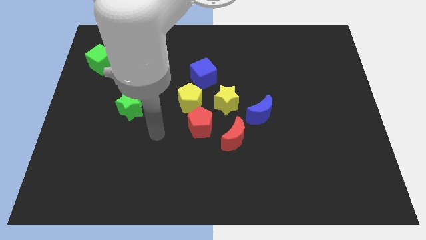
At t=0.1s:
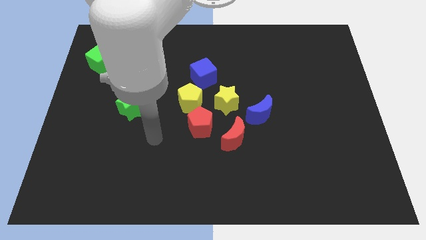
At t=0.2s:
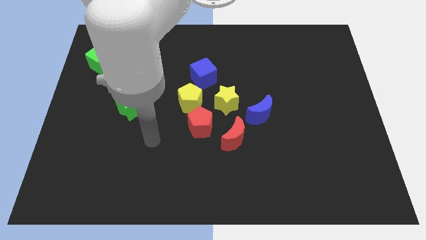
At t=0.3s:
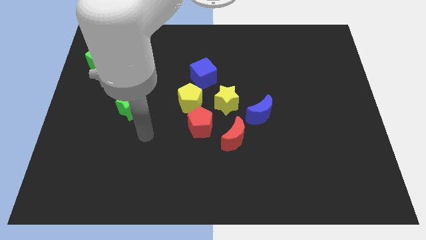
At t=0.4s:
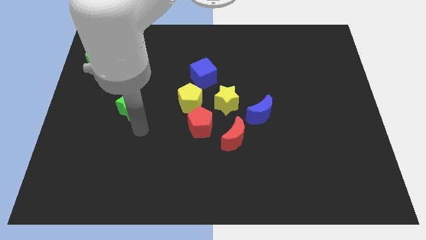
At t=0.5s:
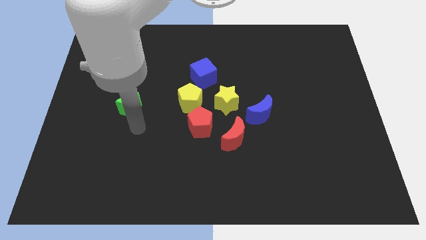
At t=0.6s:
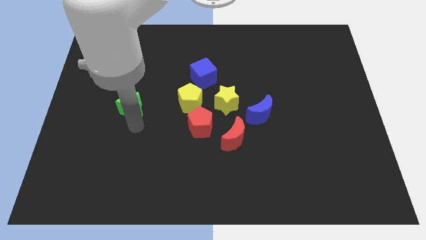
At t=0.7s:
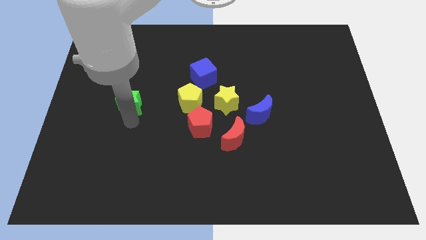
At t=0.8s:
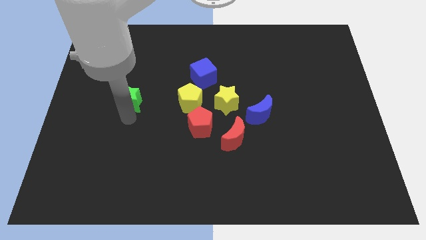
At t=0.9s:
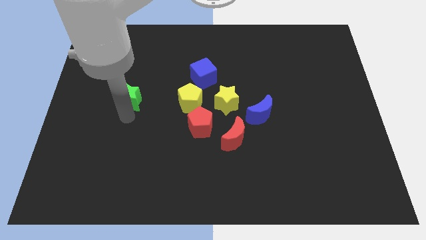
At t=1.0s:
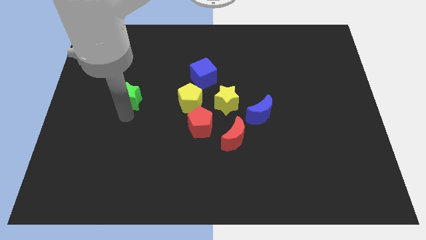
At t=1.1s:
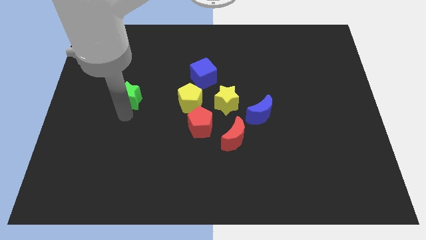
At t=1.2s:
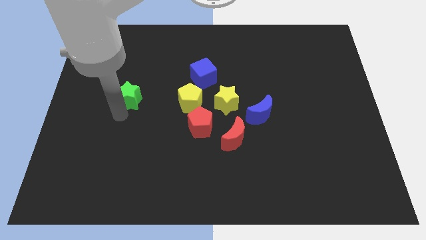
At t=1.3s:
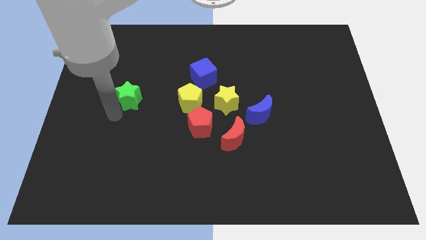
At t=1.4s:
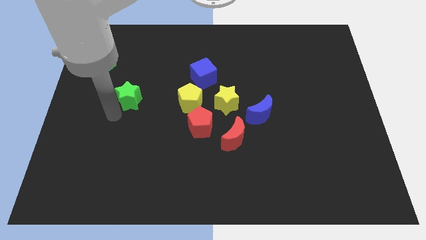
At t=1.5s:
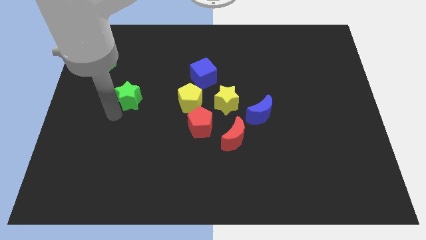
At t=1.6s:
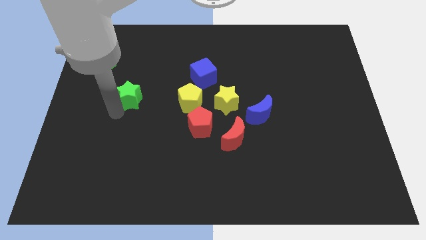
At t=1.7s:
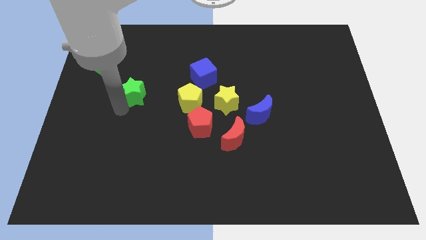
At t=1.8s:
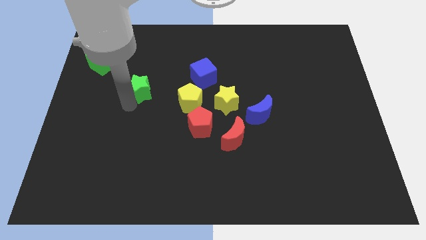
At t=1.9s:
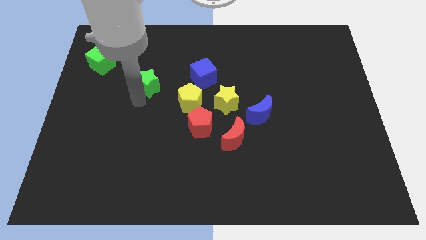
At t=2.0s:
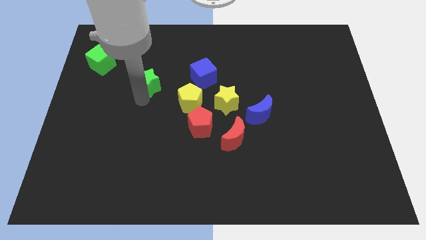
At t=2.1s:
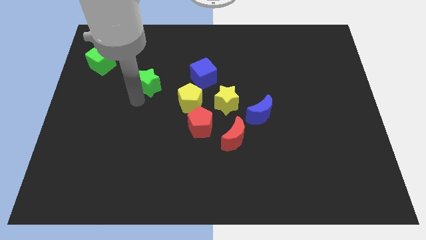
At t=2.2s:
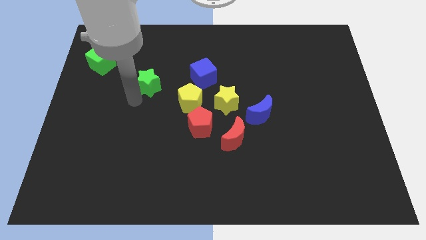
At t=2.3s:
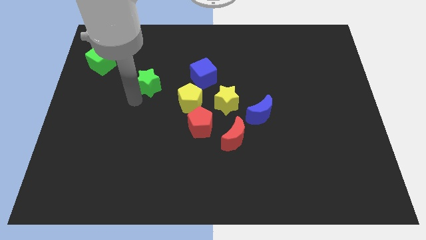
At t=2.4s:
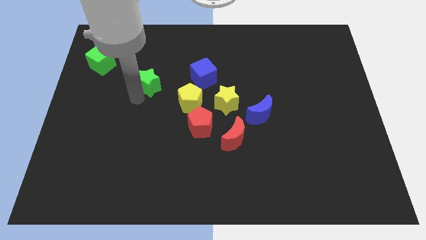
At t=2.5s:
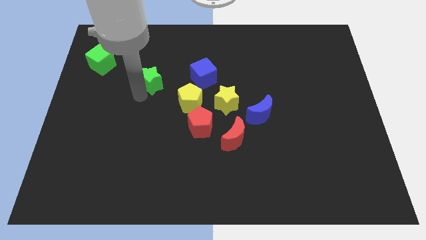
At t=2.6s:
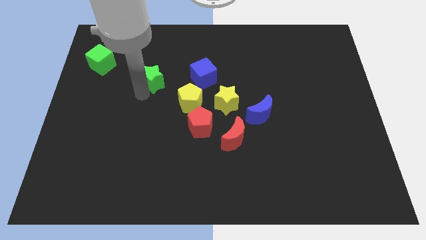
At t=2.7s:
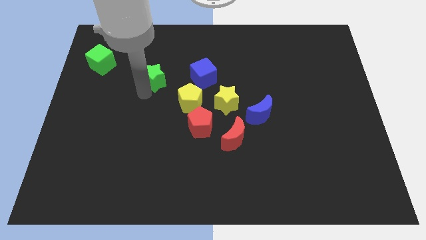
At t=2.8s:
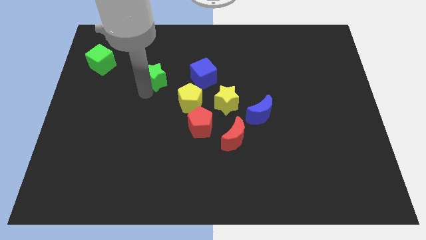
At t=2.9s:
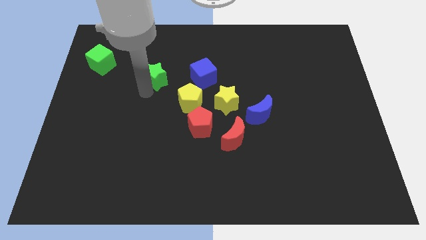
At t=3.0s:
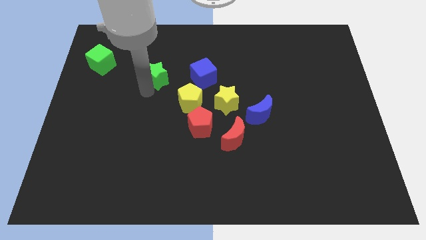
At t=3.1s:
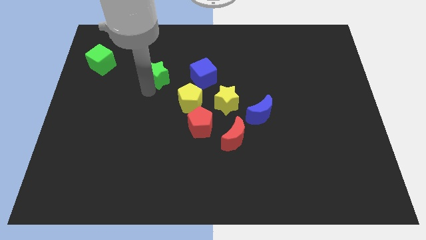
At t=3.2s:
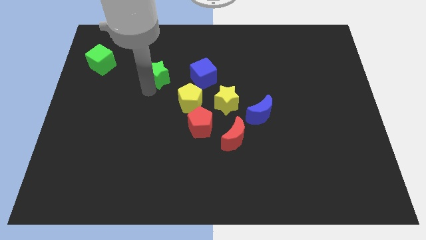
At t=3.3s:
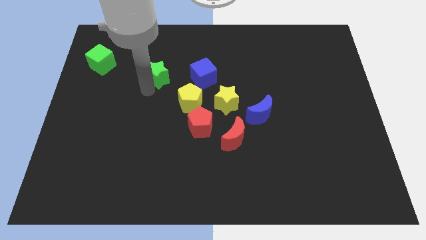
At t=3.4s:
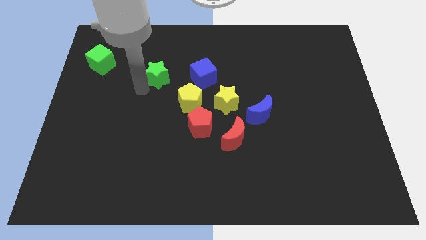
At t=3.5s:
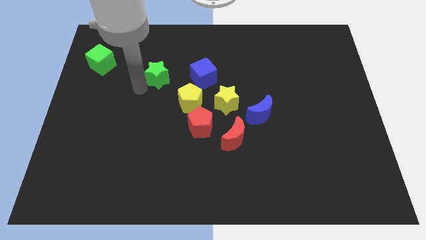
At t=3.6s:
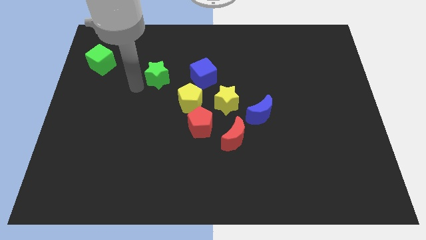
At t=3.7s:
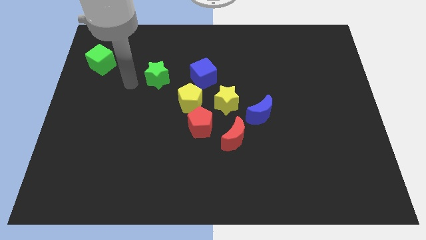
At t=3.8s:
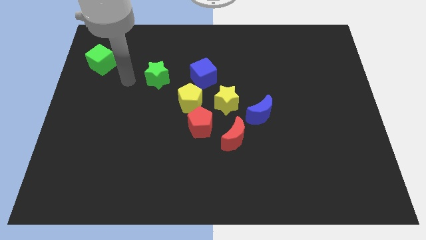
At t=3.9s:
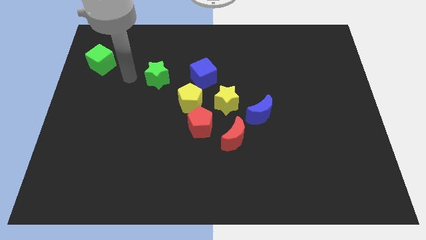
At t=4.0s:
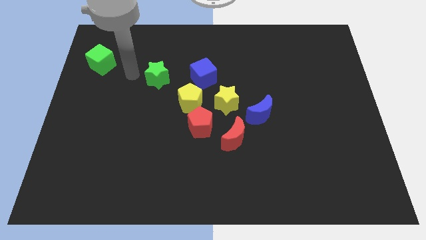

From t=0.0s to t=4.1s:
place the green star to the left of blue cube

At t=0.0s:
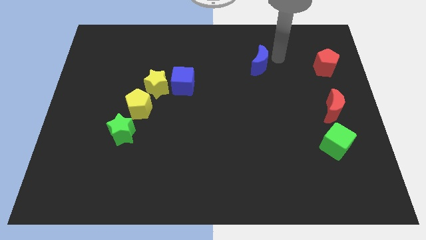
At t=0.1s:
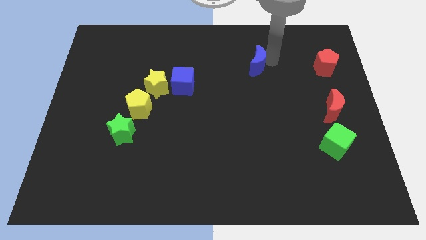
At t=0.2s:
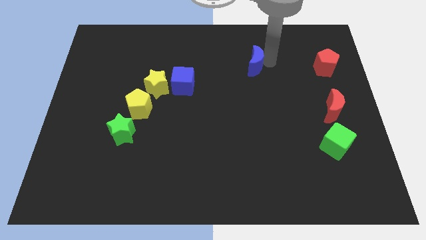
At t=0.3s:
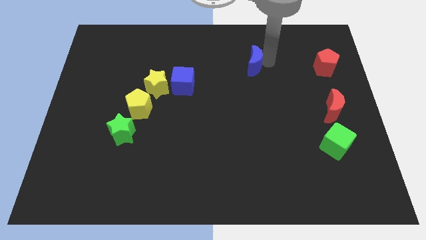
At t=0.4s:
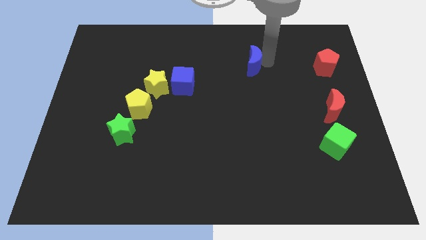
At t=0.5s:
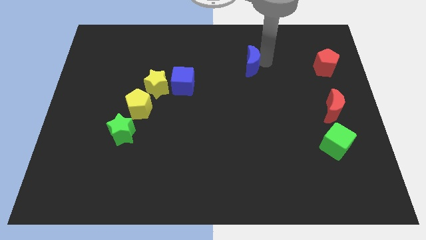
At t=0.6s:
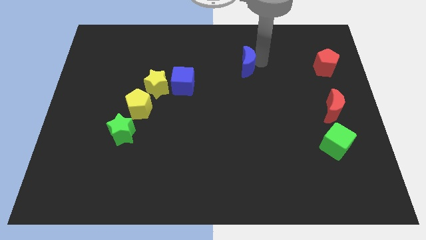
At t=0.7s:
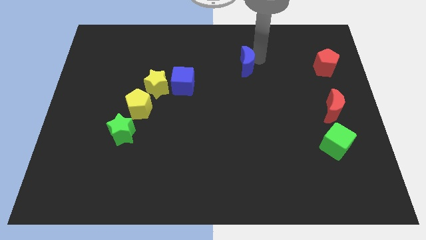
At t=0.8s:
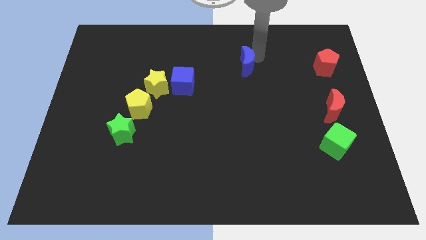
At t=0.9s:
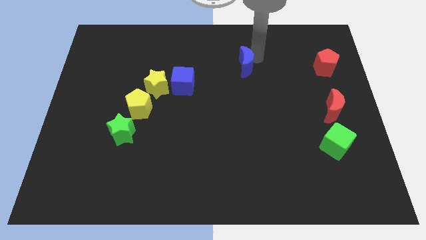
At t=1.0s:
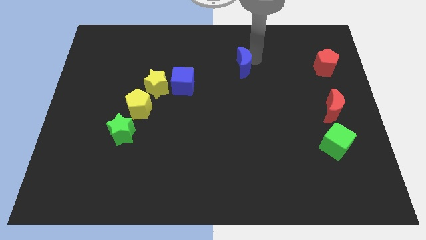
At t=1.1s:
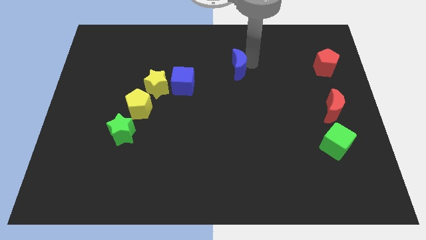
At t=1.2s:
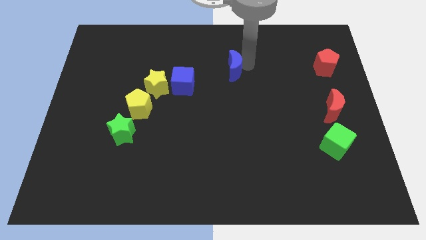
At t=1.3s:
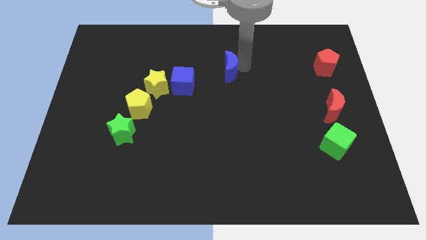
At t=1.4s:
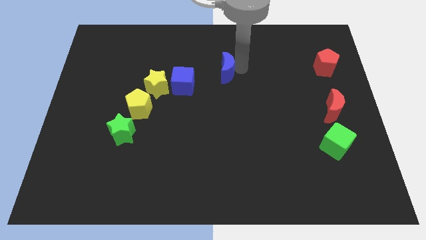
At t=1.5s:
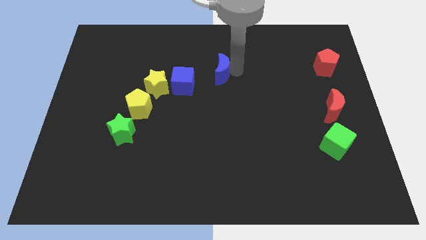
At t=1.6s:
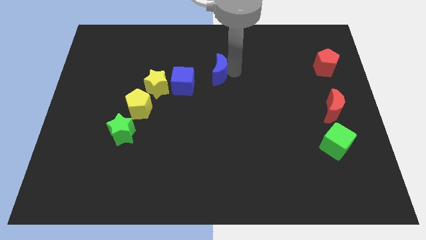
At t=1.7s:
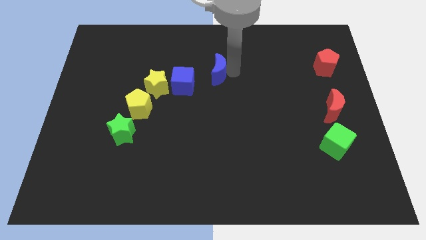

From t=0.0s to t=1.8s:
move the blue crescent towards blue cube

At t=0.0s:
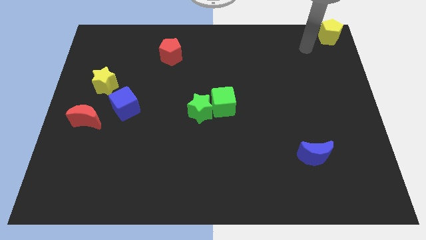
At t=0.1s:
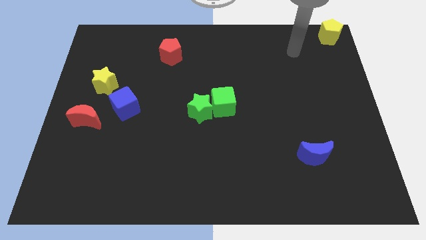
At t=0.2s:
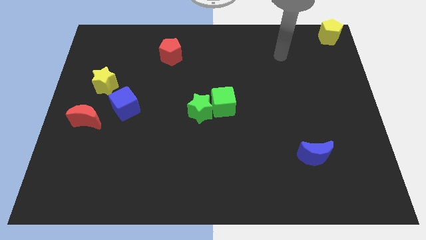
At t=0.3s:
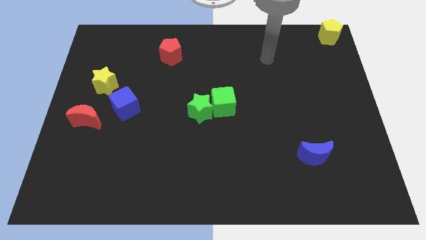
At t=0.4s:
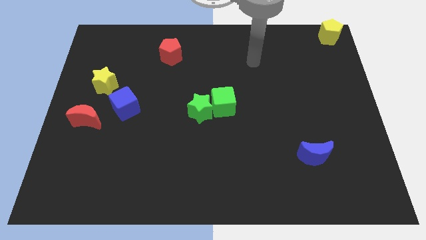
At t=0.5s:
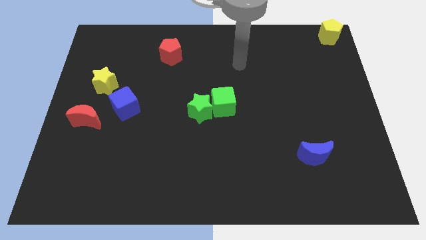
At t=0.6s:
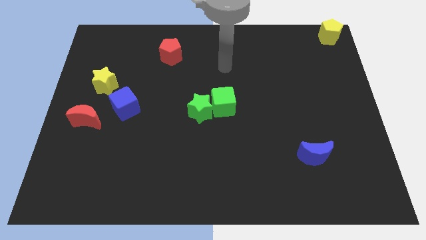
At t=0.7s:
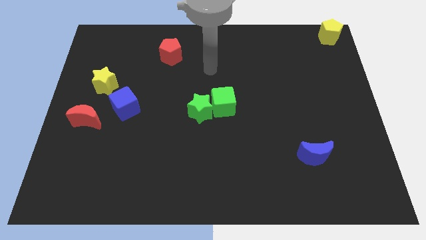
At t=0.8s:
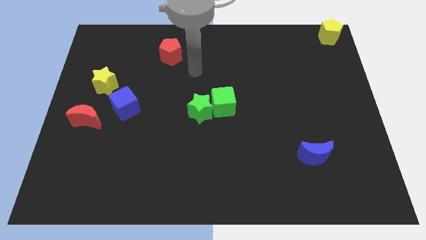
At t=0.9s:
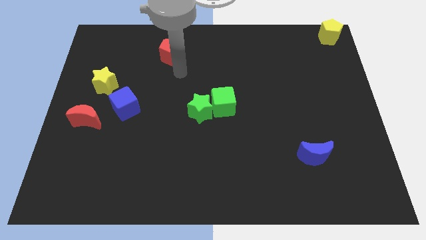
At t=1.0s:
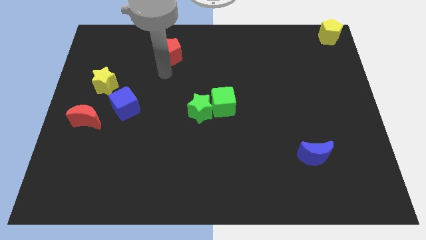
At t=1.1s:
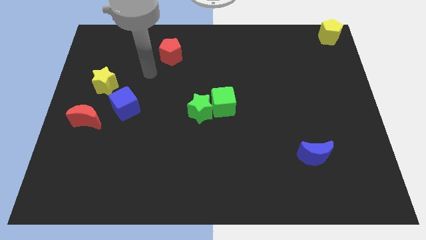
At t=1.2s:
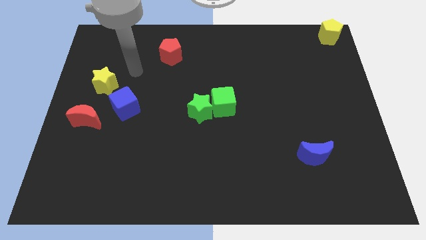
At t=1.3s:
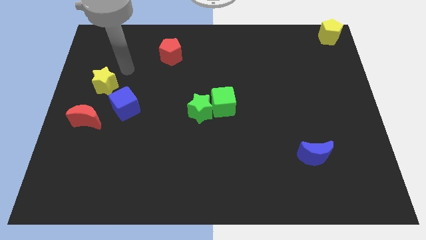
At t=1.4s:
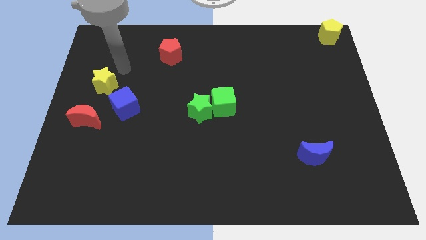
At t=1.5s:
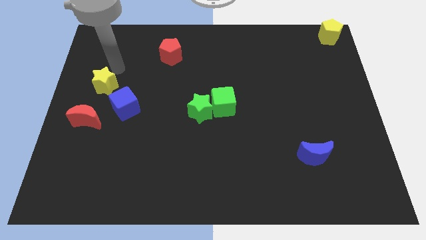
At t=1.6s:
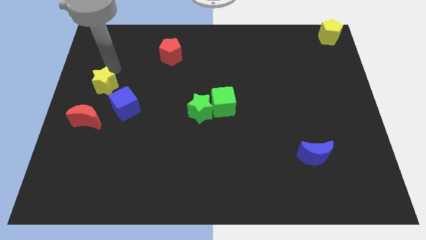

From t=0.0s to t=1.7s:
move your arm to the top of the yellow star

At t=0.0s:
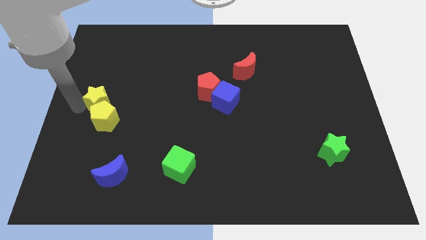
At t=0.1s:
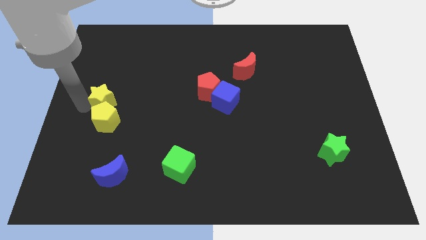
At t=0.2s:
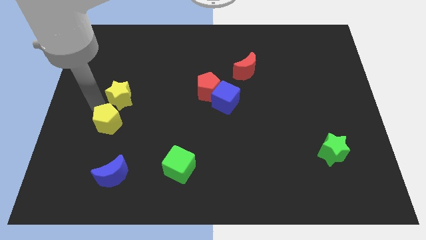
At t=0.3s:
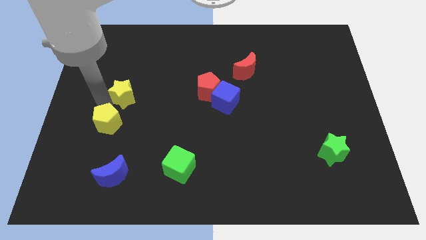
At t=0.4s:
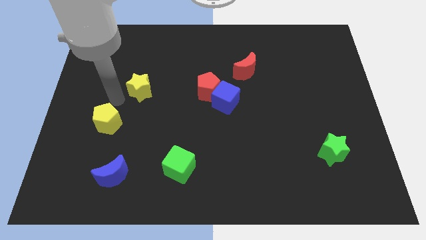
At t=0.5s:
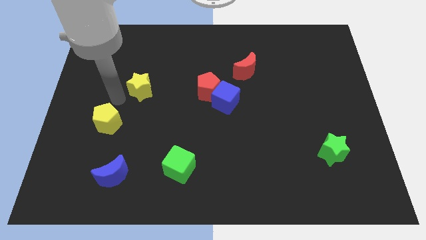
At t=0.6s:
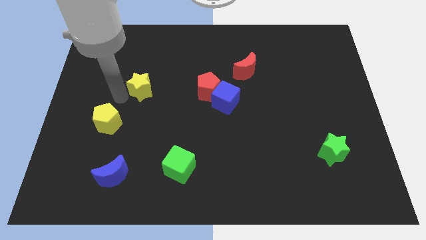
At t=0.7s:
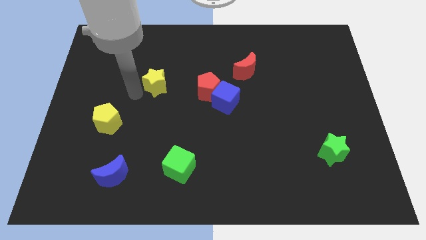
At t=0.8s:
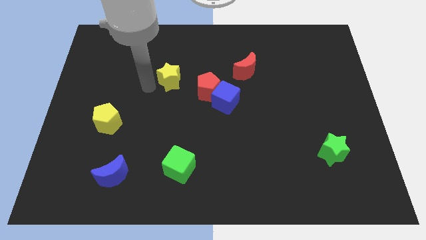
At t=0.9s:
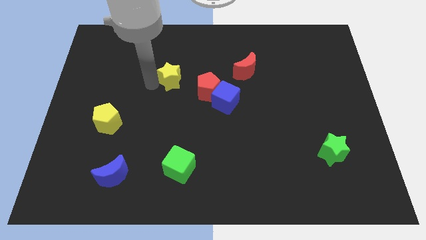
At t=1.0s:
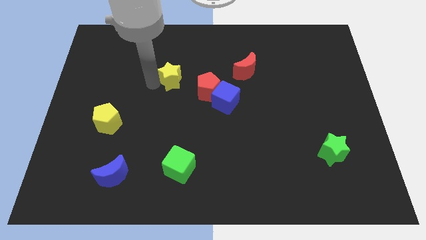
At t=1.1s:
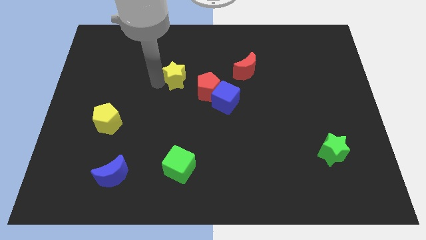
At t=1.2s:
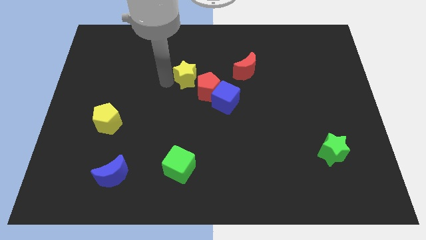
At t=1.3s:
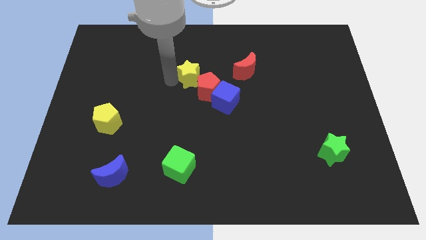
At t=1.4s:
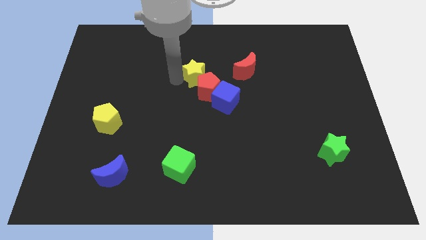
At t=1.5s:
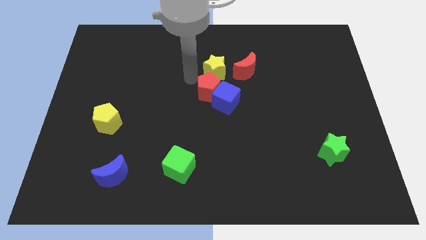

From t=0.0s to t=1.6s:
move the yellow star above the red pentagon
